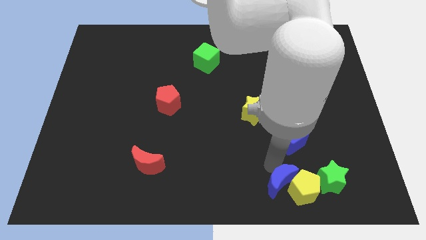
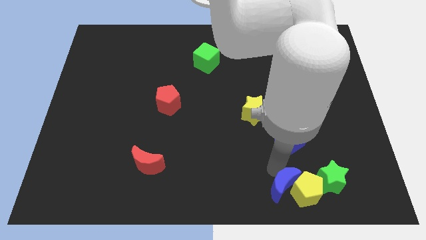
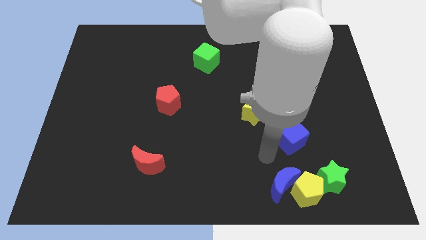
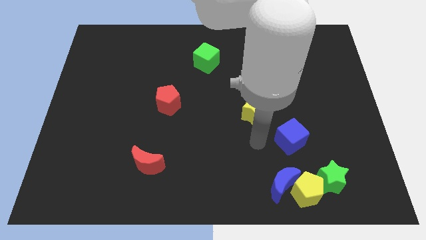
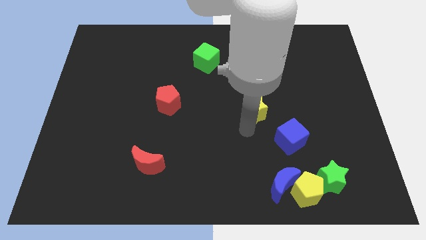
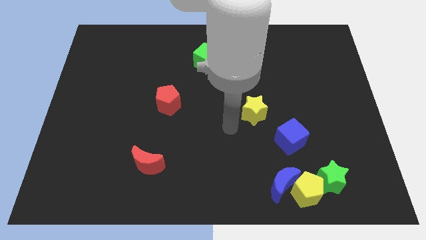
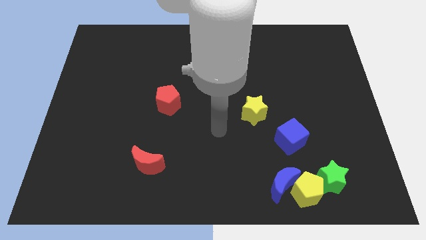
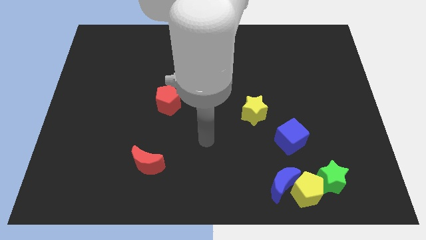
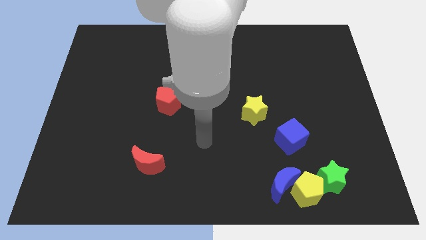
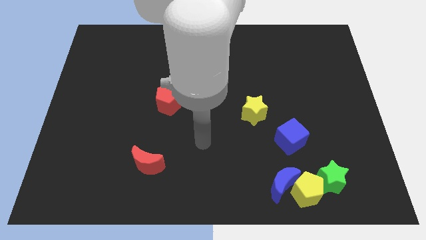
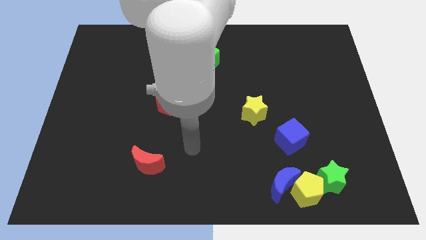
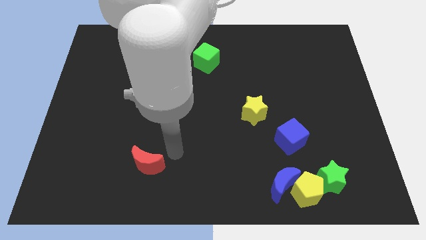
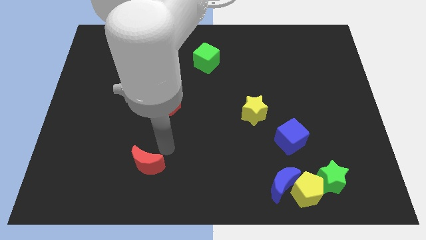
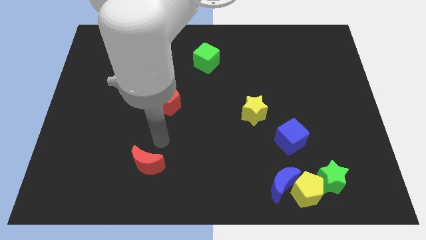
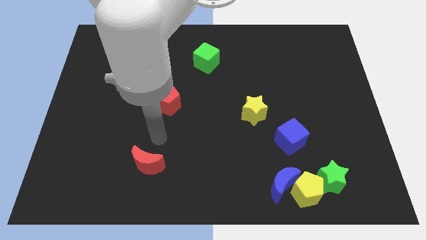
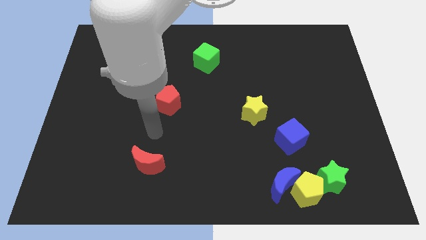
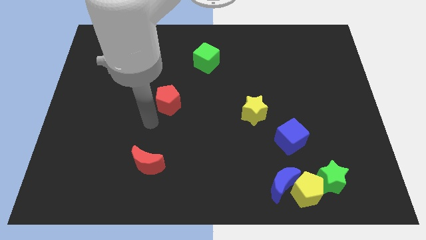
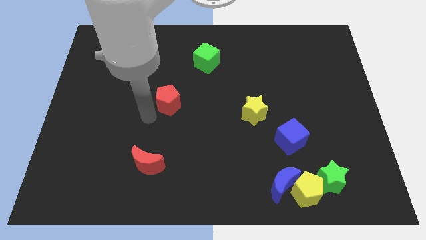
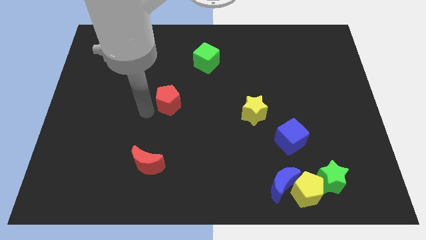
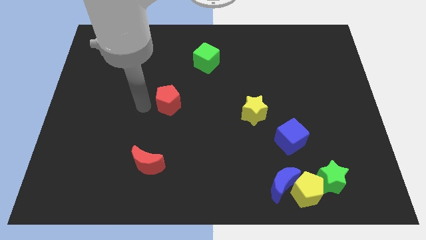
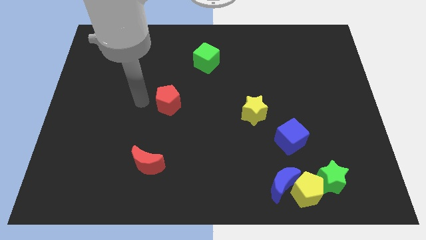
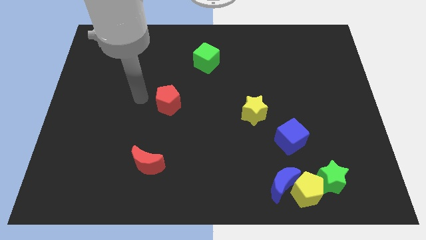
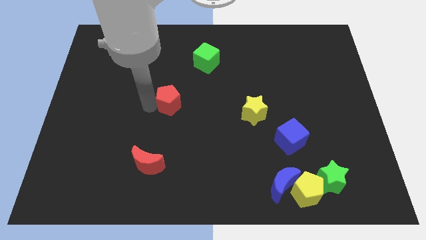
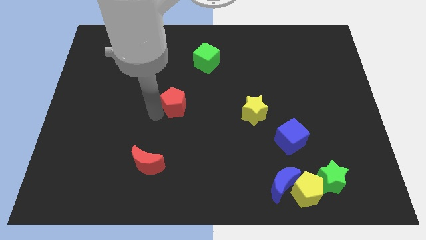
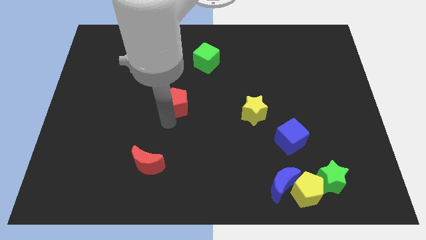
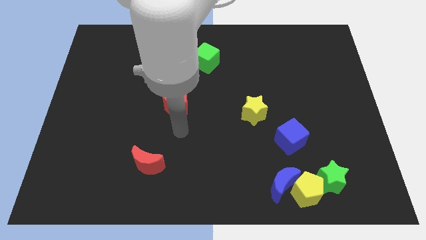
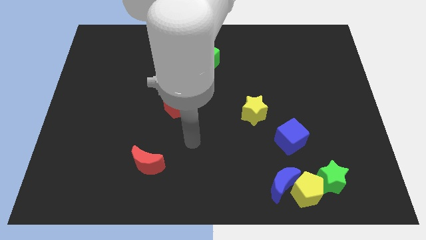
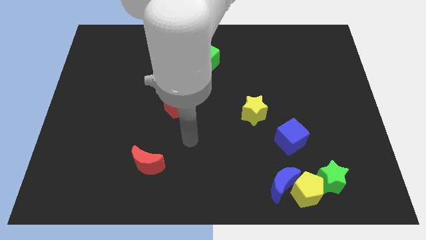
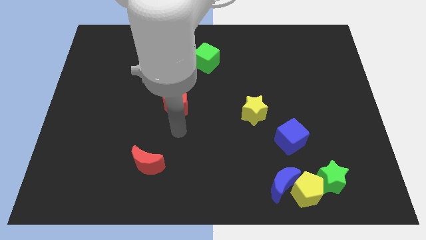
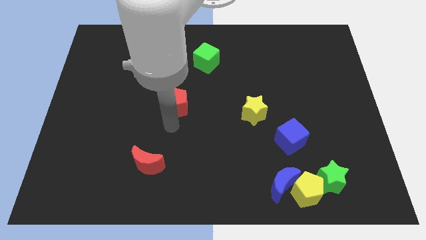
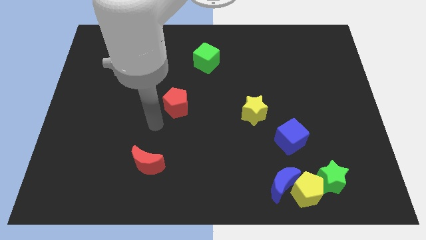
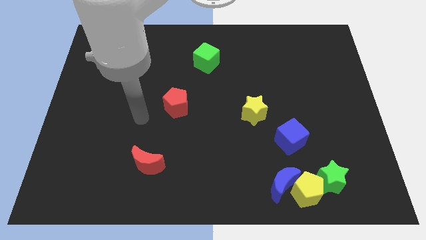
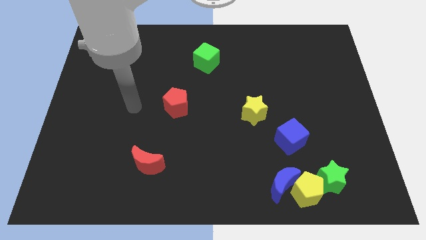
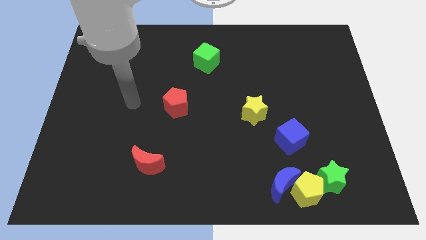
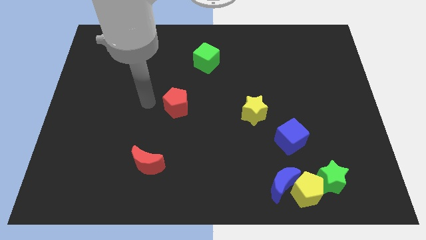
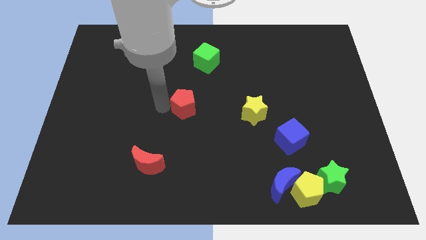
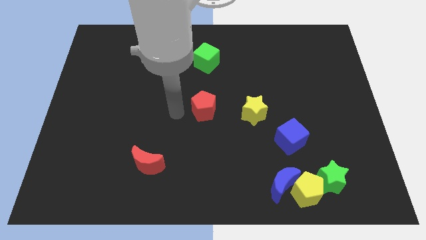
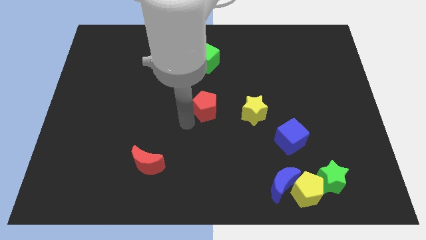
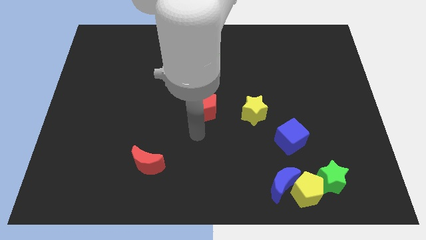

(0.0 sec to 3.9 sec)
push the red pentagon closer to the yellow star

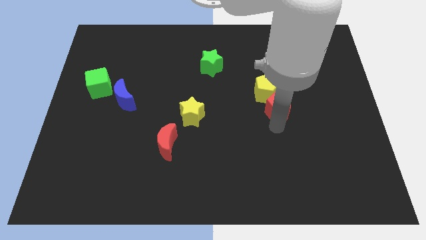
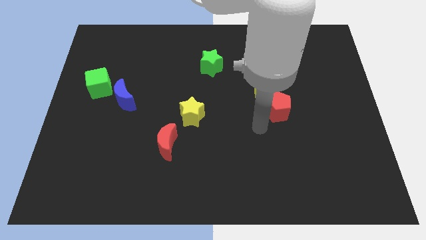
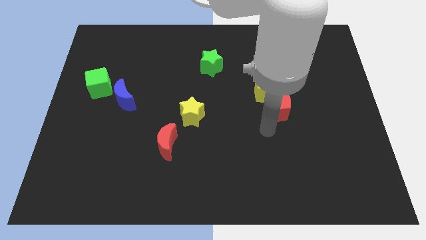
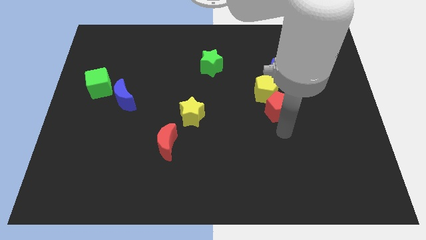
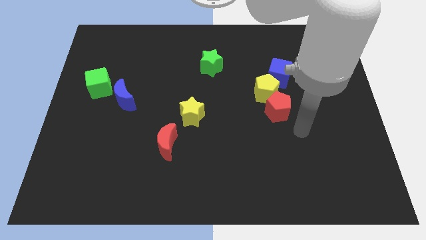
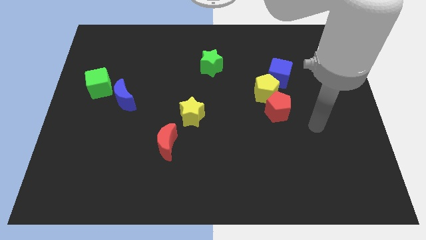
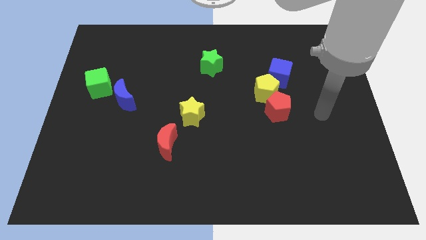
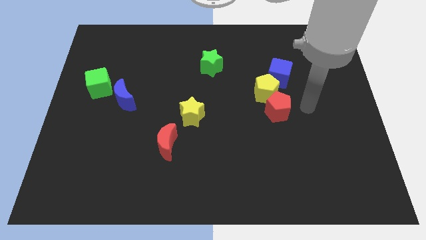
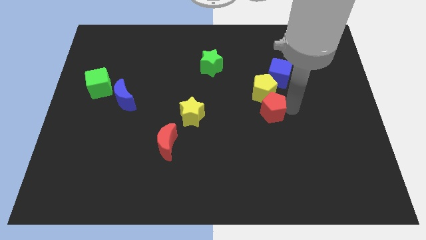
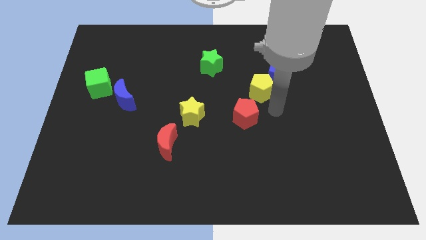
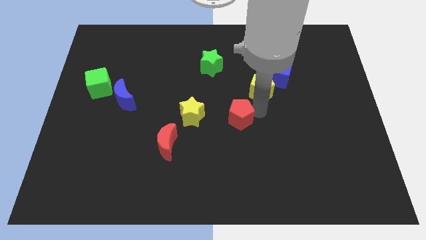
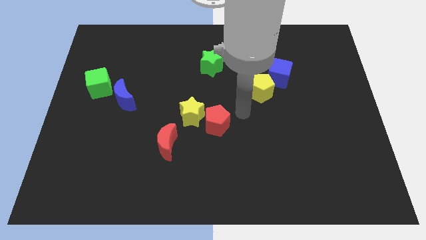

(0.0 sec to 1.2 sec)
move the red pentagon away from the yellow pentagon

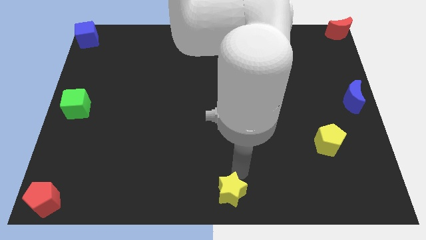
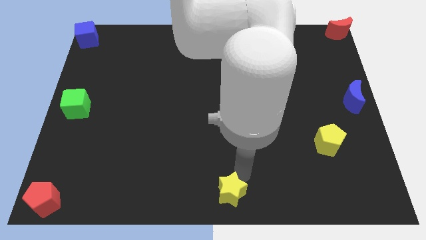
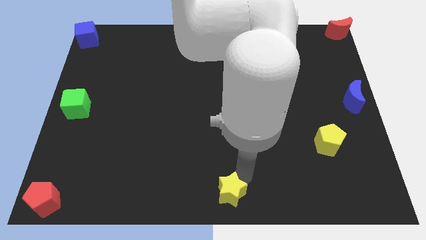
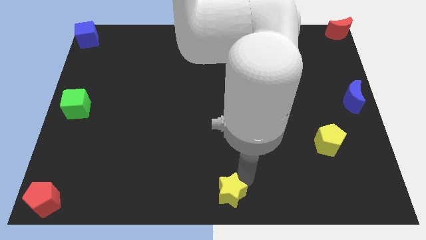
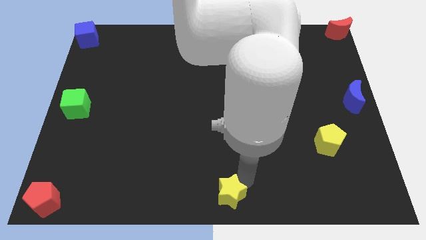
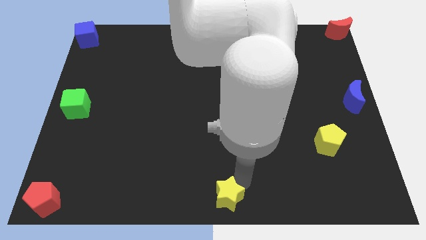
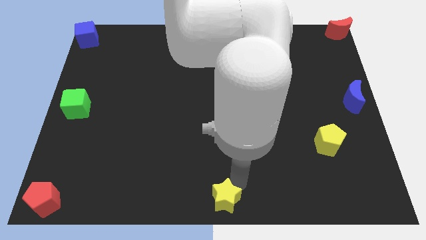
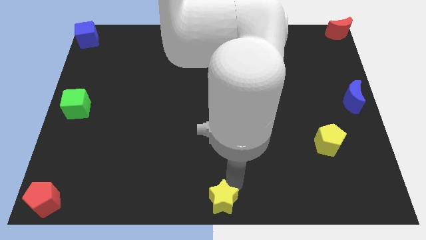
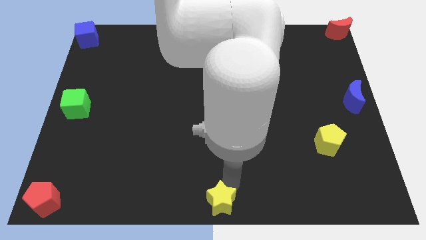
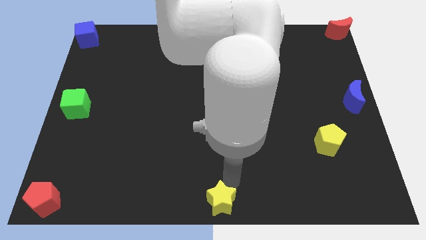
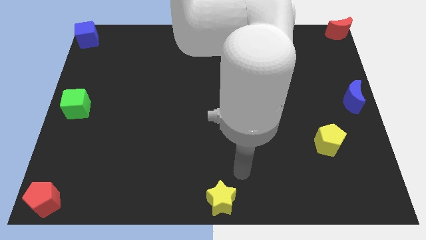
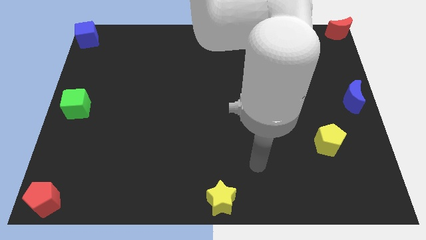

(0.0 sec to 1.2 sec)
place the yellow star to the bottom center of the board

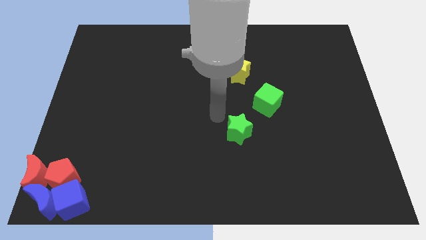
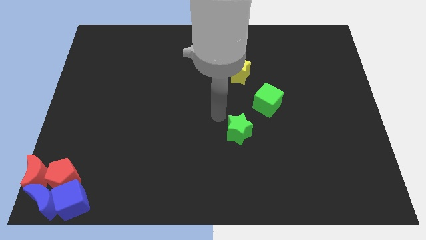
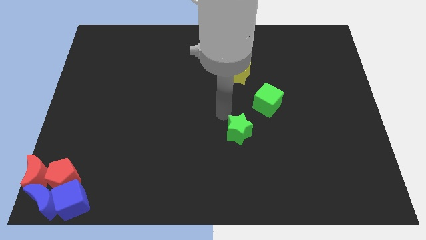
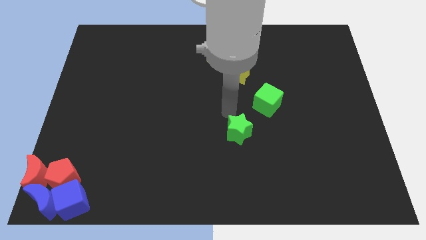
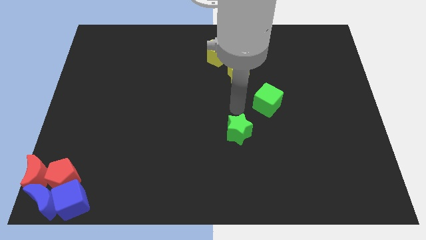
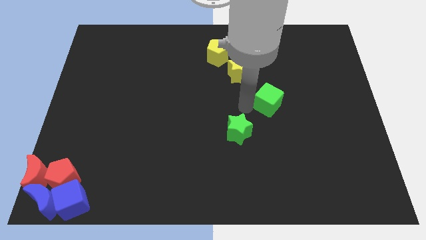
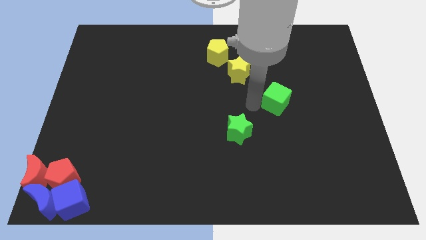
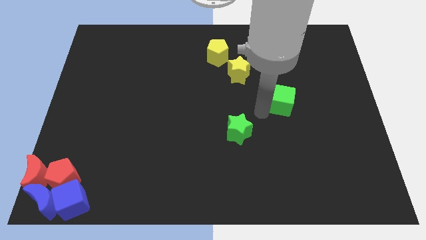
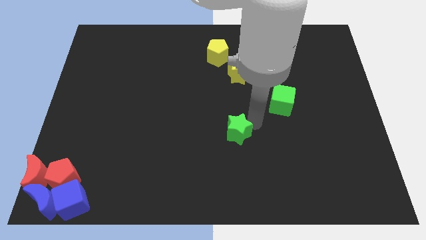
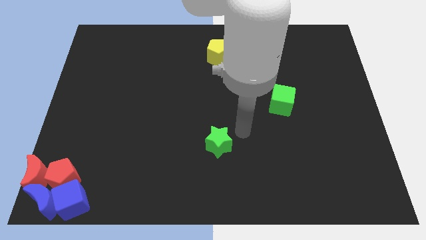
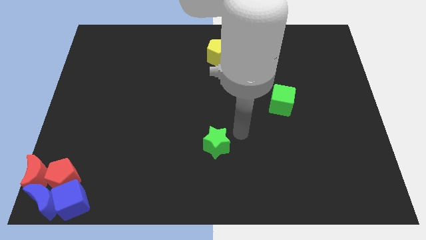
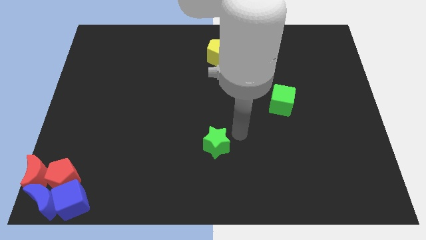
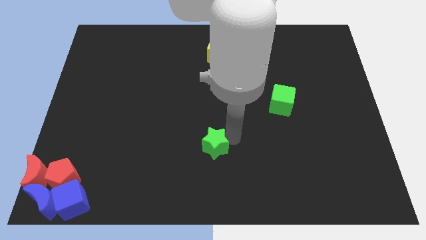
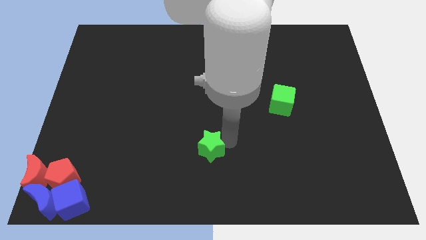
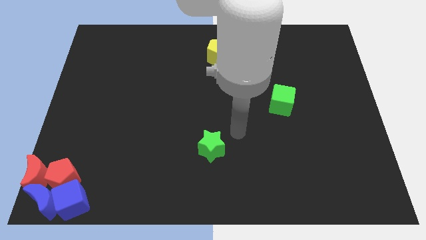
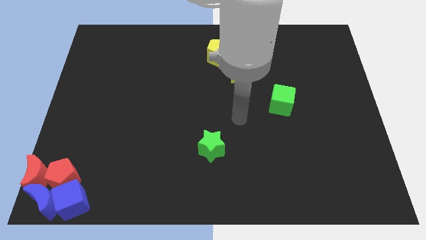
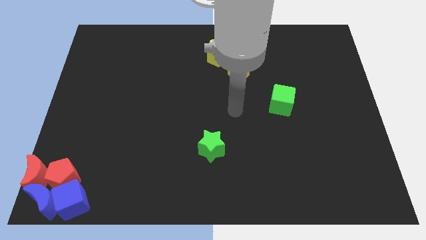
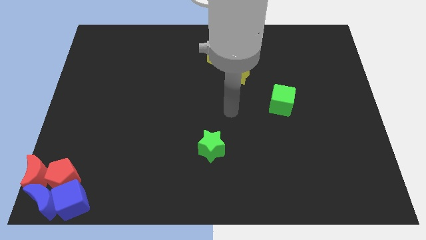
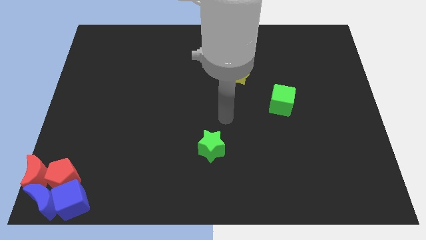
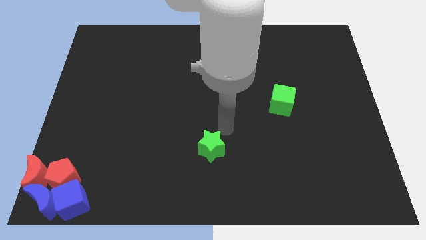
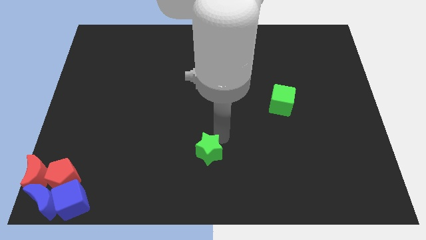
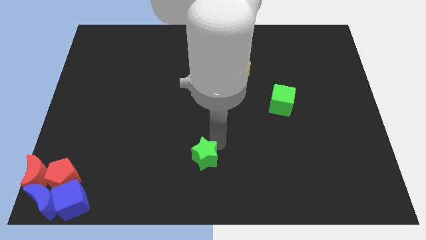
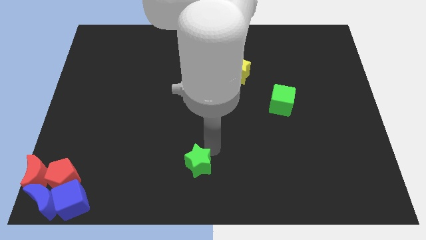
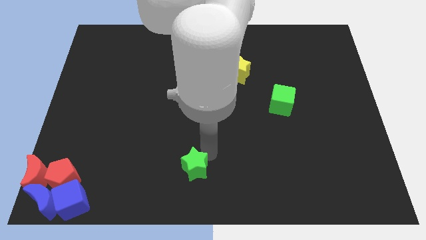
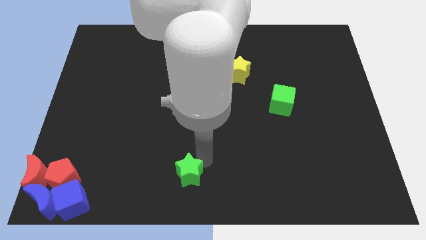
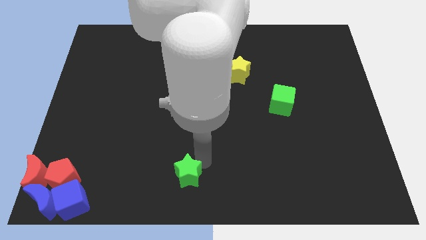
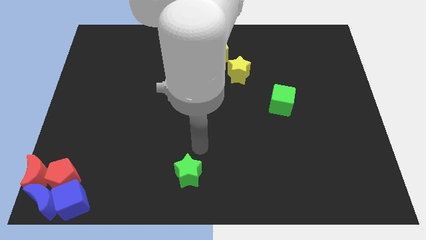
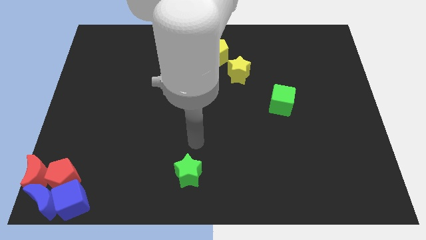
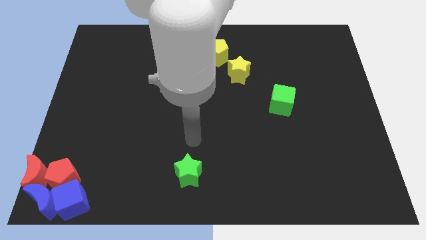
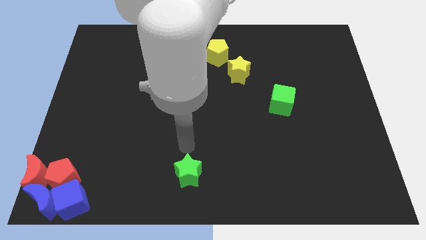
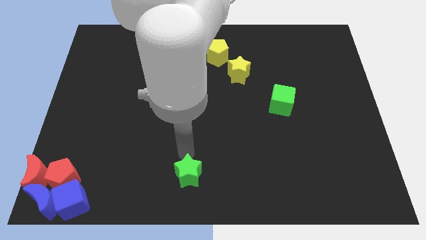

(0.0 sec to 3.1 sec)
separate green star from green cube
